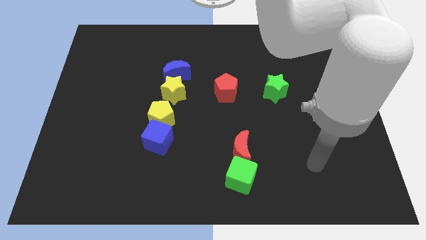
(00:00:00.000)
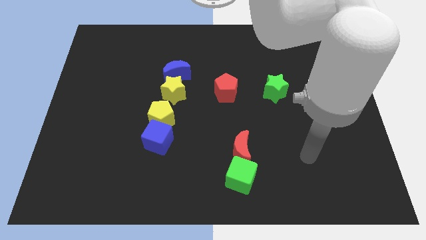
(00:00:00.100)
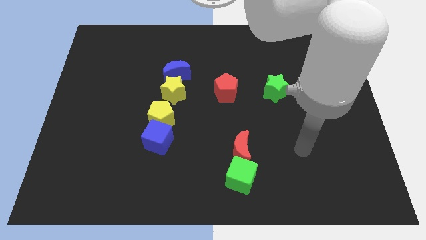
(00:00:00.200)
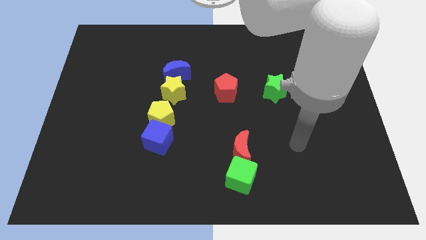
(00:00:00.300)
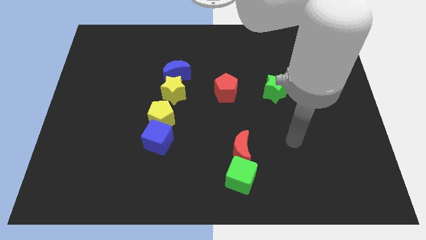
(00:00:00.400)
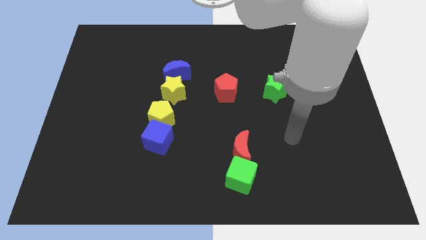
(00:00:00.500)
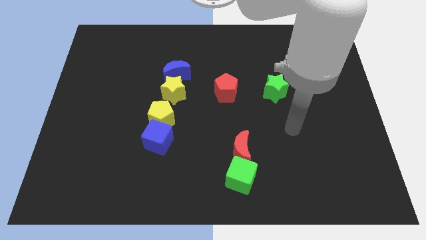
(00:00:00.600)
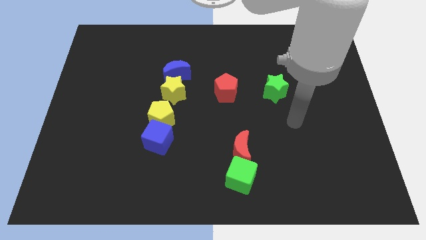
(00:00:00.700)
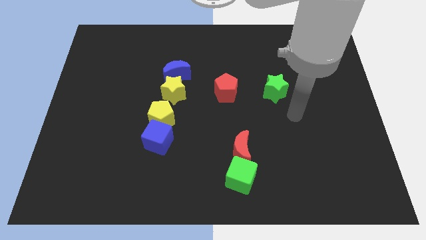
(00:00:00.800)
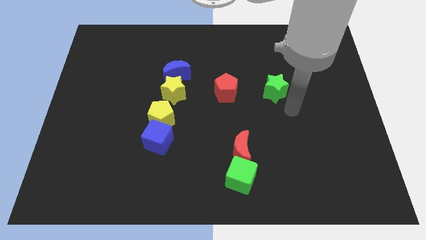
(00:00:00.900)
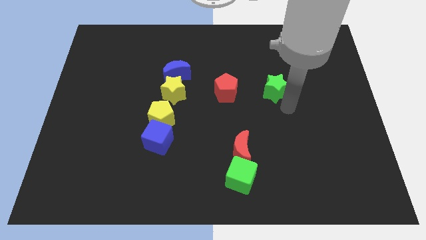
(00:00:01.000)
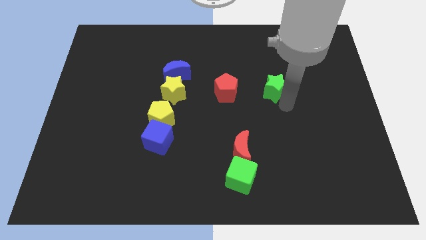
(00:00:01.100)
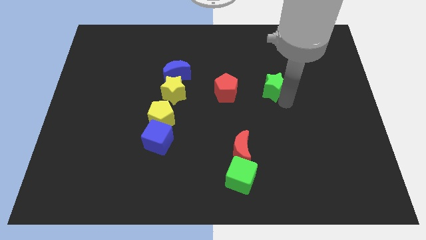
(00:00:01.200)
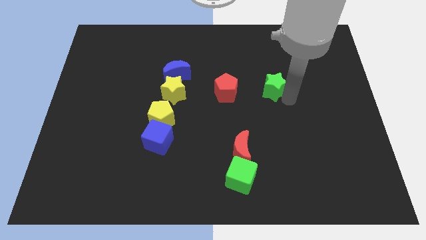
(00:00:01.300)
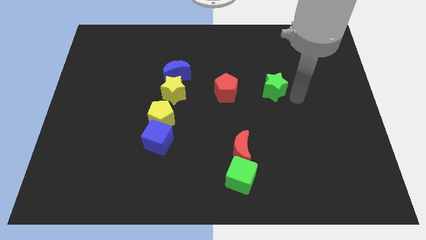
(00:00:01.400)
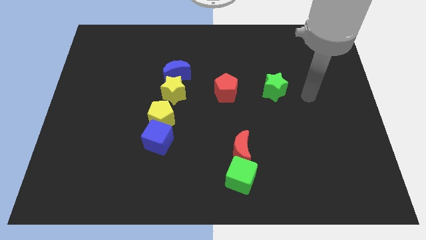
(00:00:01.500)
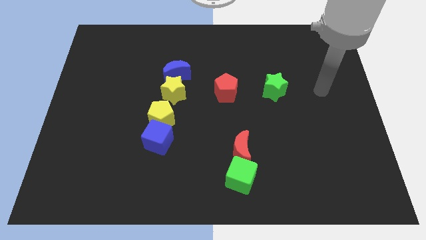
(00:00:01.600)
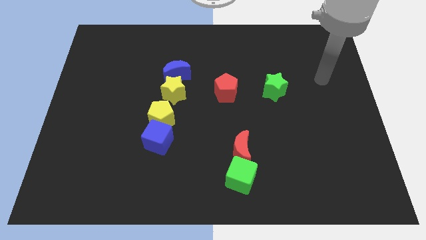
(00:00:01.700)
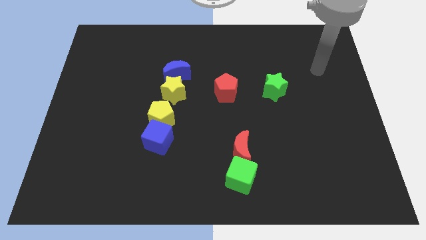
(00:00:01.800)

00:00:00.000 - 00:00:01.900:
move your arm towards the top right side of the board

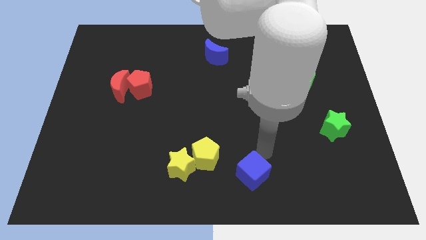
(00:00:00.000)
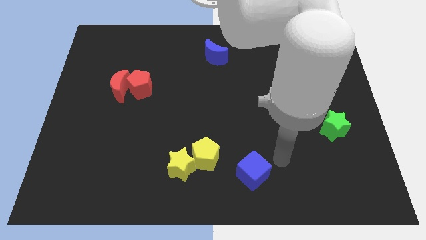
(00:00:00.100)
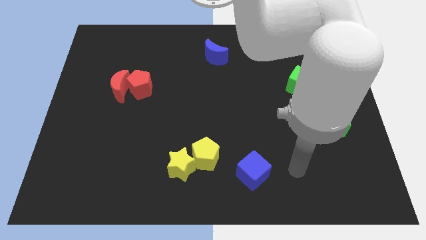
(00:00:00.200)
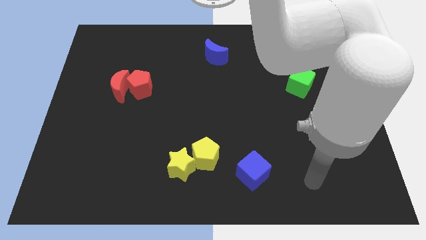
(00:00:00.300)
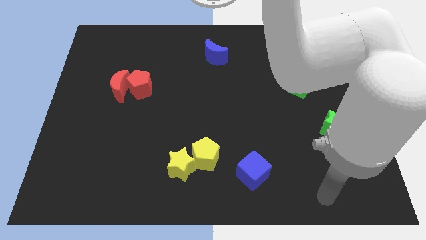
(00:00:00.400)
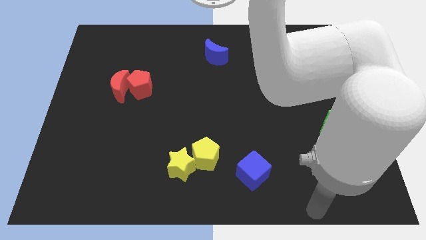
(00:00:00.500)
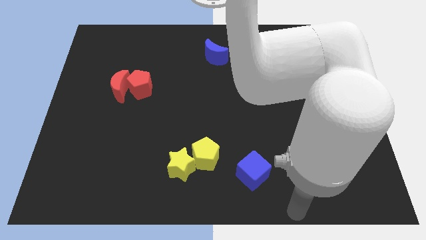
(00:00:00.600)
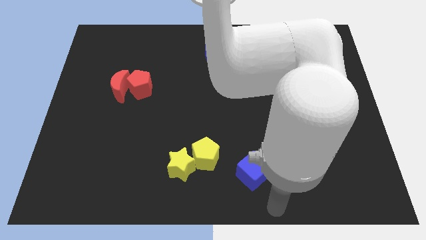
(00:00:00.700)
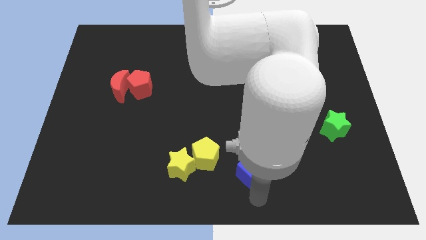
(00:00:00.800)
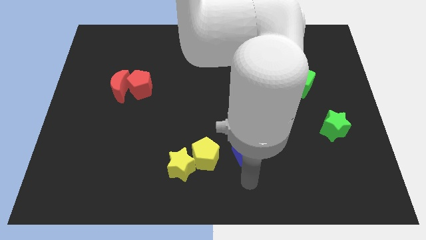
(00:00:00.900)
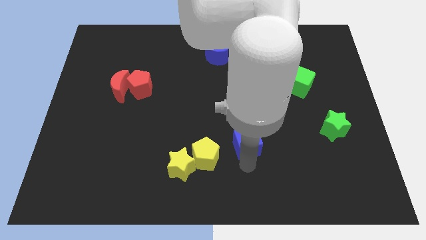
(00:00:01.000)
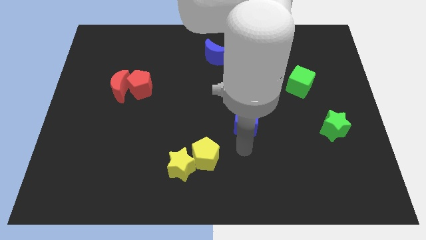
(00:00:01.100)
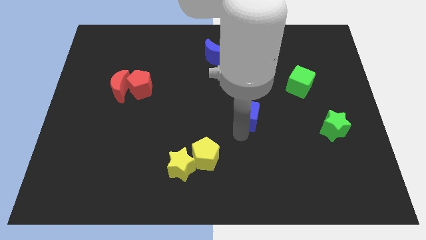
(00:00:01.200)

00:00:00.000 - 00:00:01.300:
push the blue cube towards the centre of the board

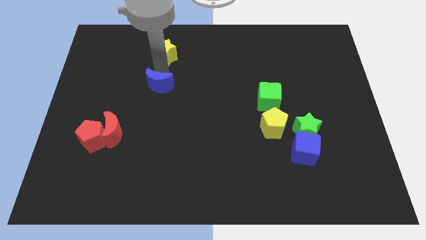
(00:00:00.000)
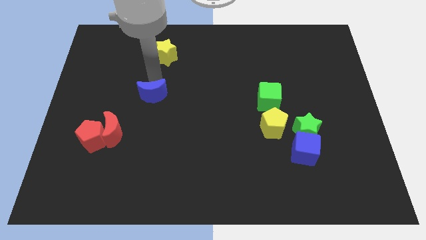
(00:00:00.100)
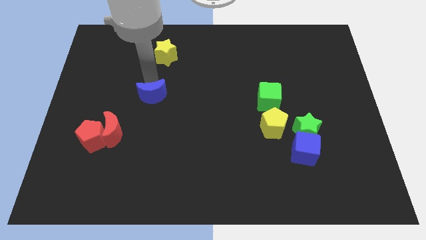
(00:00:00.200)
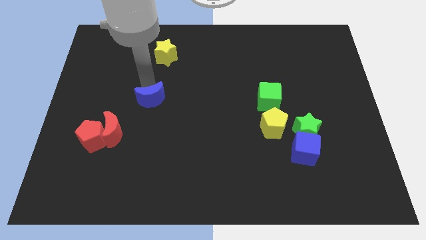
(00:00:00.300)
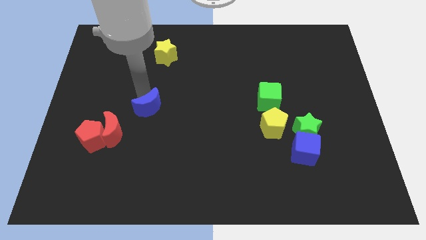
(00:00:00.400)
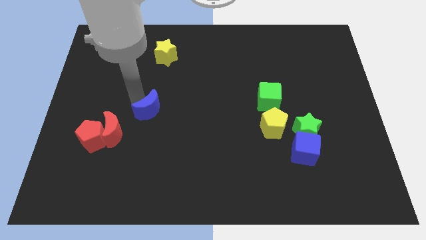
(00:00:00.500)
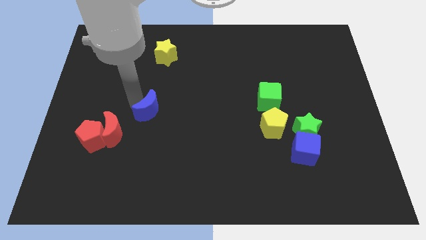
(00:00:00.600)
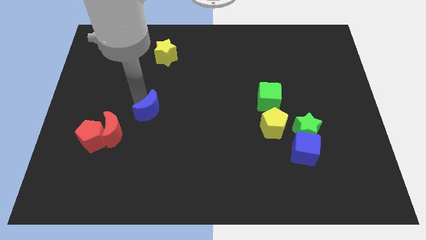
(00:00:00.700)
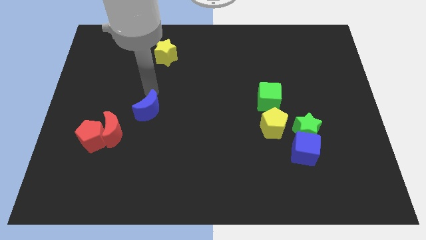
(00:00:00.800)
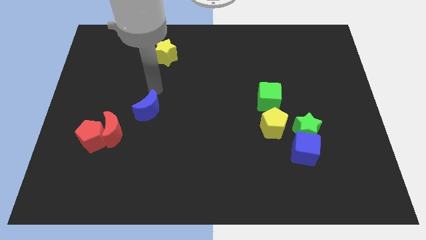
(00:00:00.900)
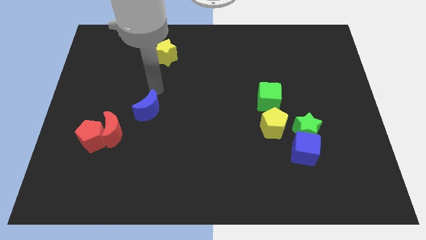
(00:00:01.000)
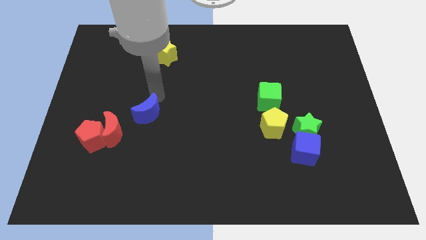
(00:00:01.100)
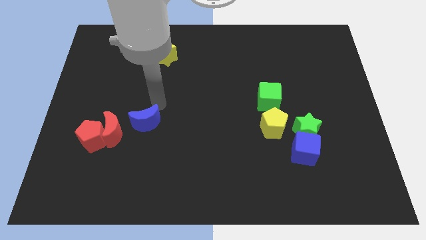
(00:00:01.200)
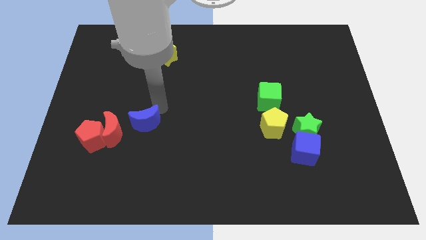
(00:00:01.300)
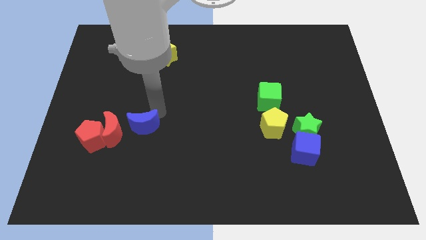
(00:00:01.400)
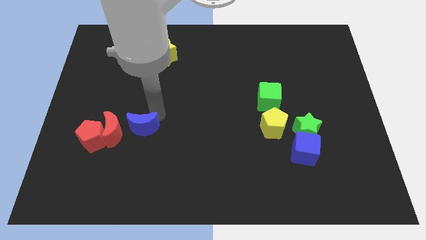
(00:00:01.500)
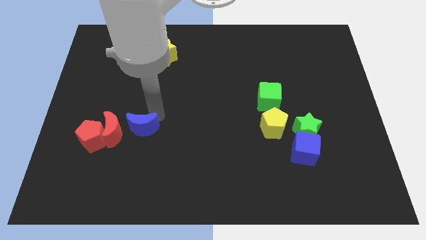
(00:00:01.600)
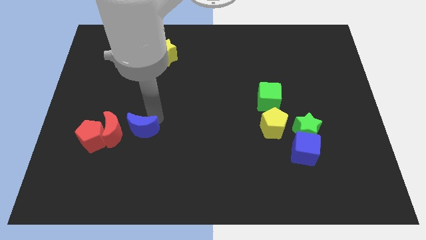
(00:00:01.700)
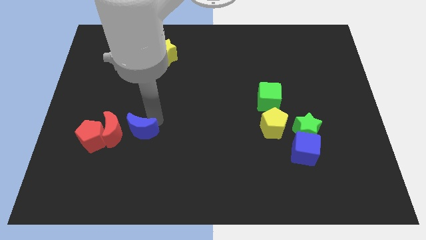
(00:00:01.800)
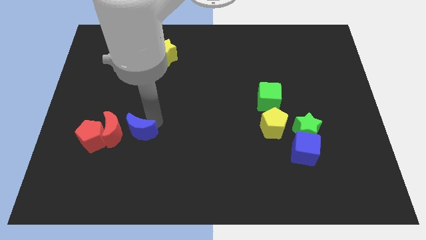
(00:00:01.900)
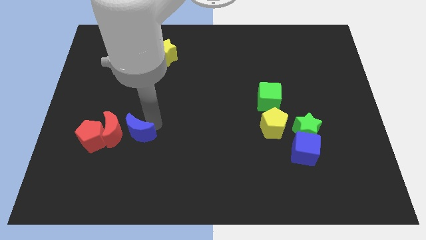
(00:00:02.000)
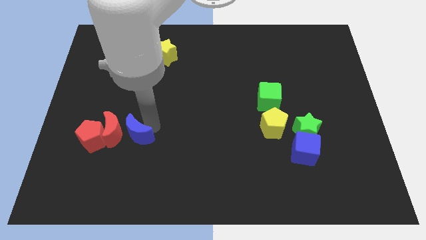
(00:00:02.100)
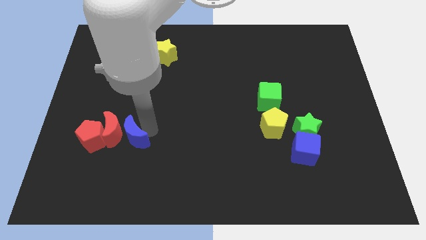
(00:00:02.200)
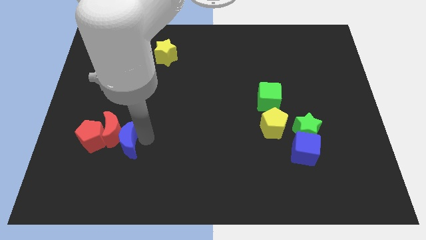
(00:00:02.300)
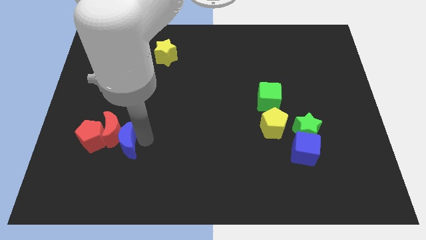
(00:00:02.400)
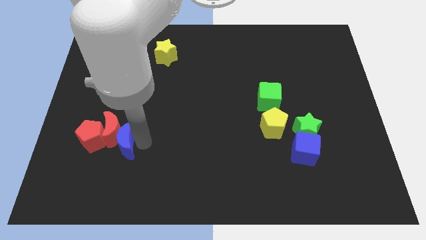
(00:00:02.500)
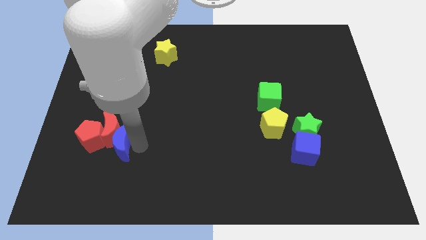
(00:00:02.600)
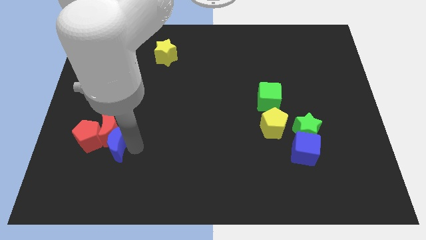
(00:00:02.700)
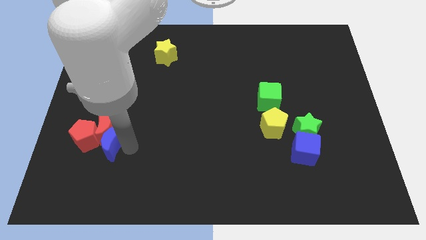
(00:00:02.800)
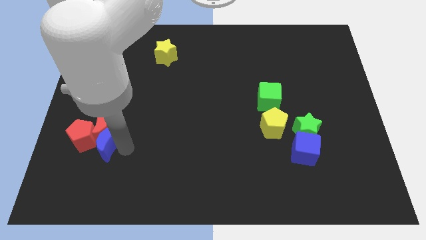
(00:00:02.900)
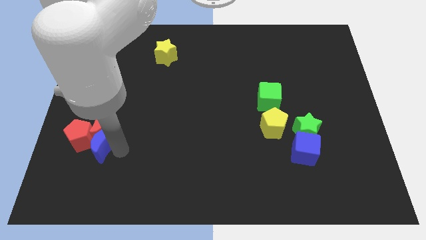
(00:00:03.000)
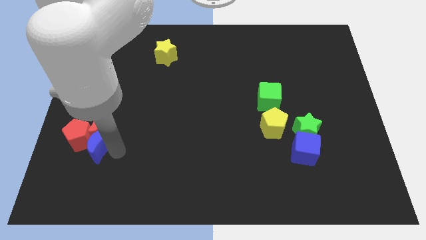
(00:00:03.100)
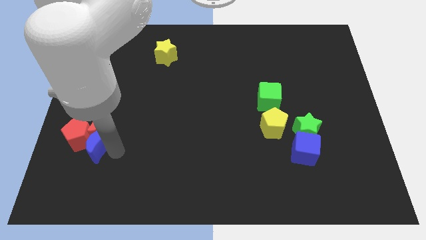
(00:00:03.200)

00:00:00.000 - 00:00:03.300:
place the blue moon parallel right to the red pentagon

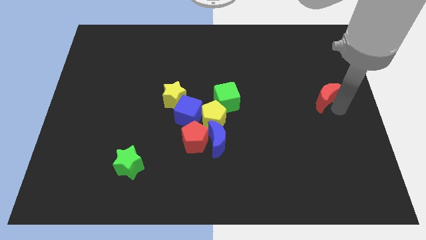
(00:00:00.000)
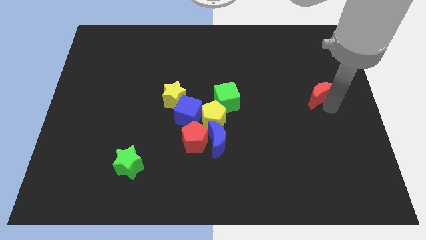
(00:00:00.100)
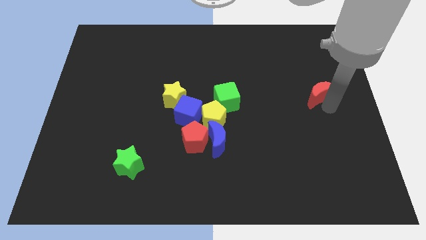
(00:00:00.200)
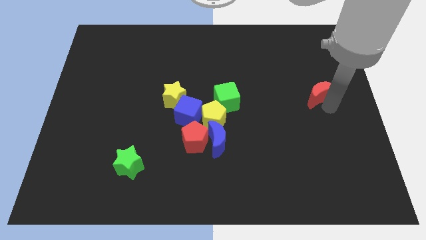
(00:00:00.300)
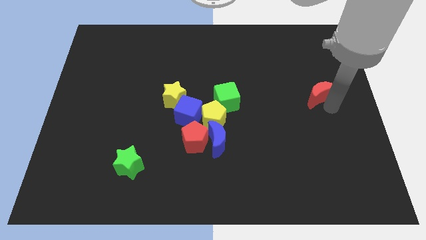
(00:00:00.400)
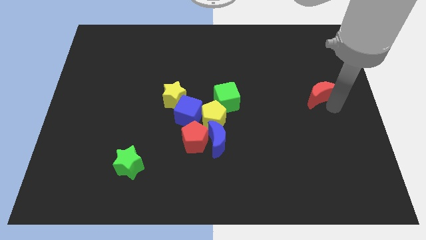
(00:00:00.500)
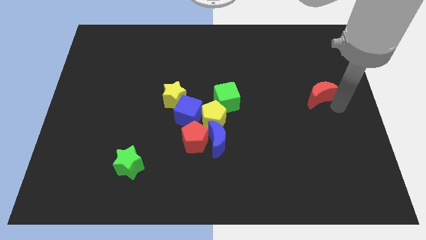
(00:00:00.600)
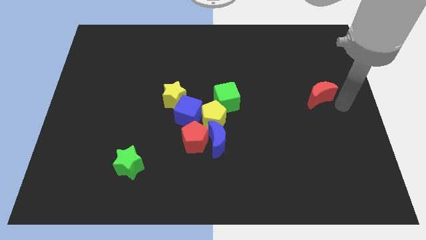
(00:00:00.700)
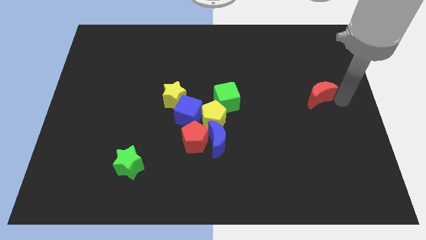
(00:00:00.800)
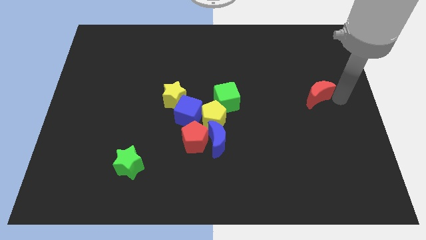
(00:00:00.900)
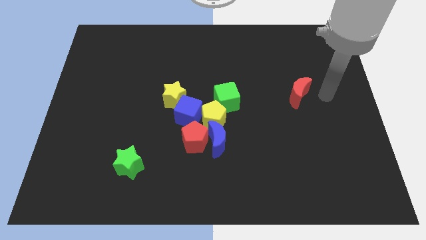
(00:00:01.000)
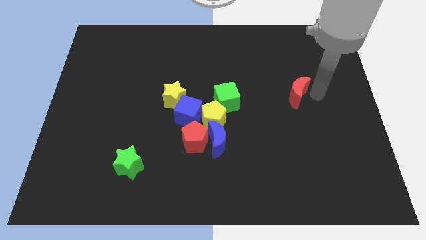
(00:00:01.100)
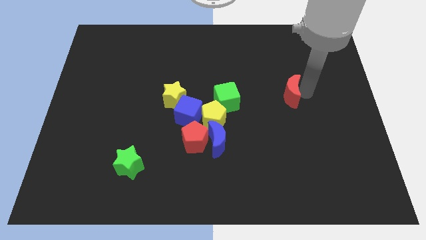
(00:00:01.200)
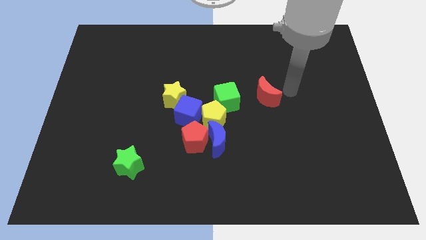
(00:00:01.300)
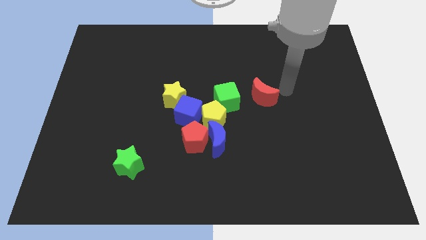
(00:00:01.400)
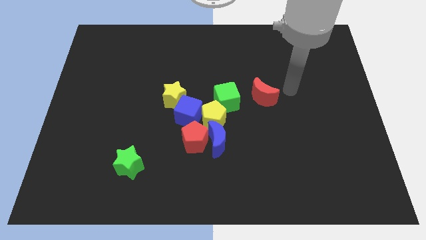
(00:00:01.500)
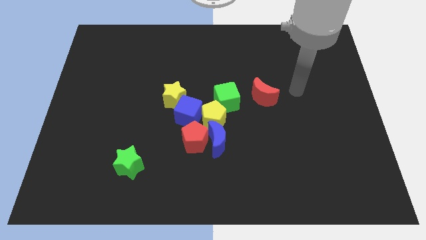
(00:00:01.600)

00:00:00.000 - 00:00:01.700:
place the red crescent to the left of the green cube

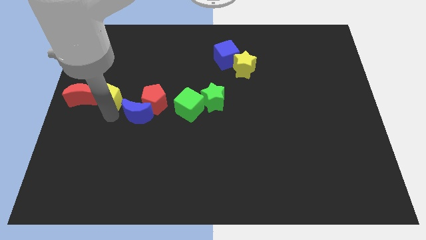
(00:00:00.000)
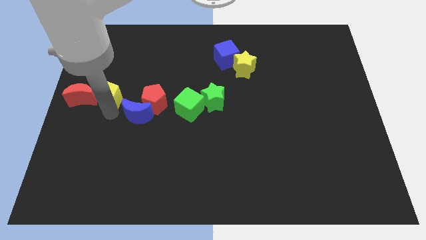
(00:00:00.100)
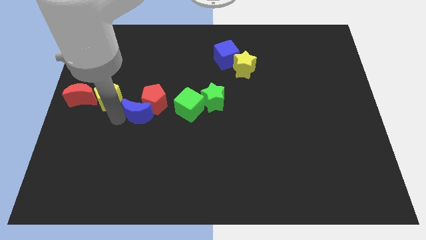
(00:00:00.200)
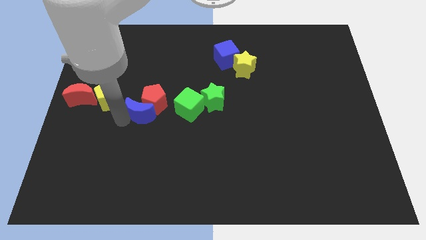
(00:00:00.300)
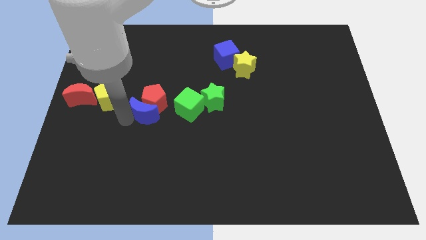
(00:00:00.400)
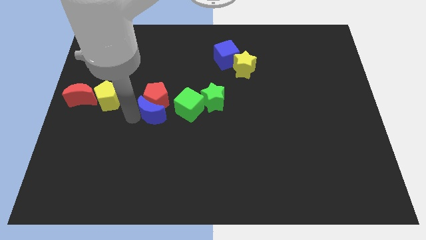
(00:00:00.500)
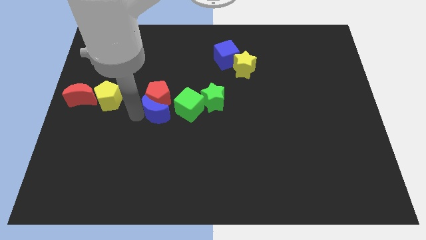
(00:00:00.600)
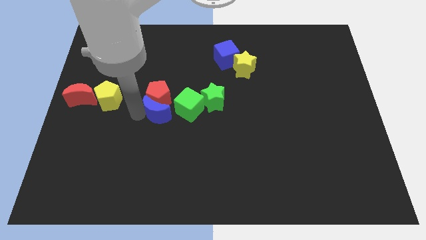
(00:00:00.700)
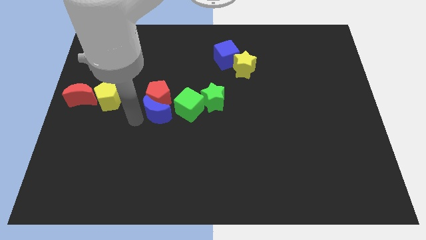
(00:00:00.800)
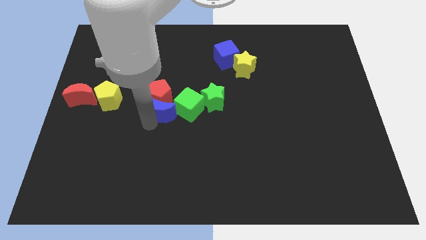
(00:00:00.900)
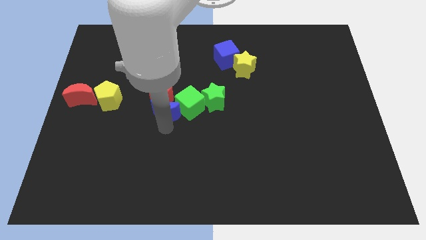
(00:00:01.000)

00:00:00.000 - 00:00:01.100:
push the blue moon into the red pentagon
